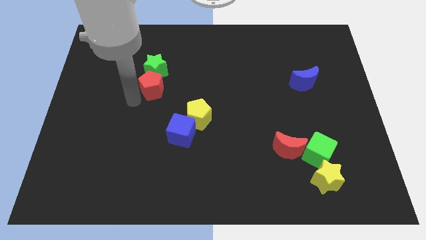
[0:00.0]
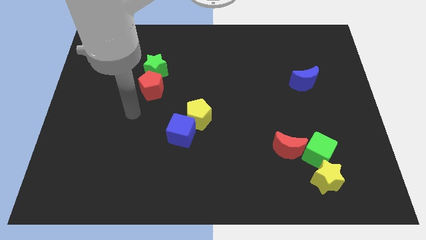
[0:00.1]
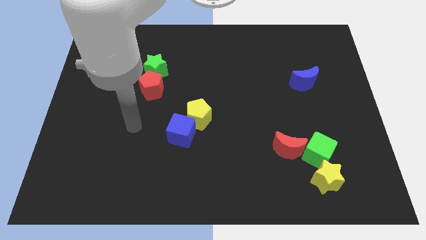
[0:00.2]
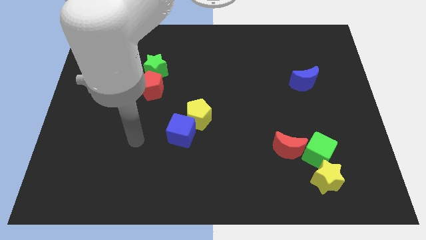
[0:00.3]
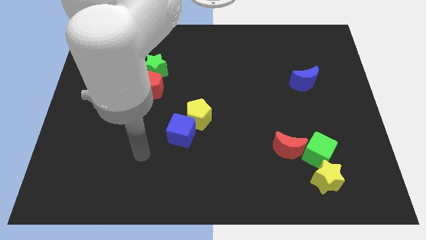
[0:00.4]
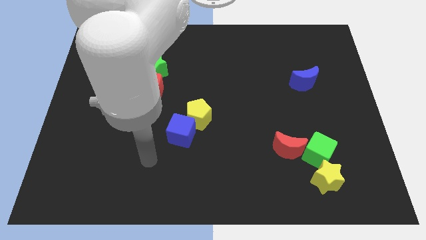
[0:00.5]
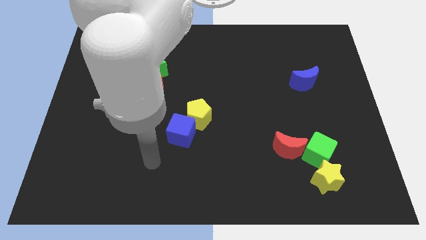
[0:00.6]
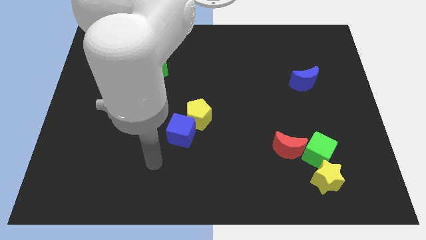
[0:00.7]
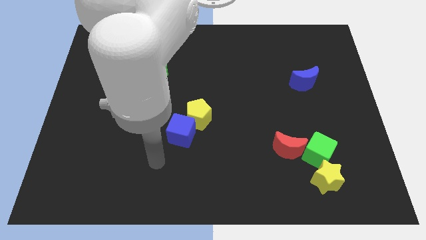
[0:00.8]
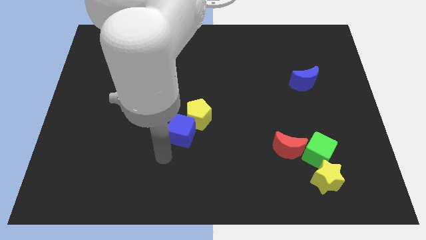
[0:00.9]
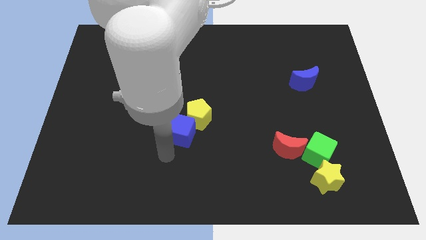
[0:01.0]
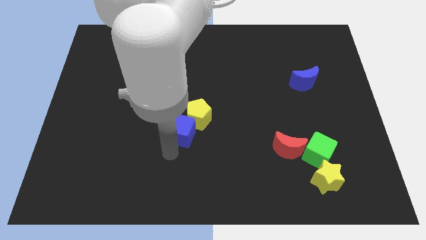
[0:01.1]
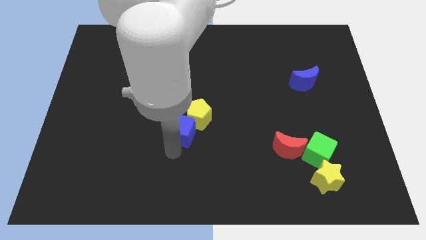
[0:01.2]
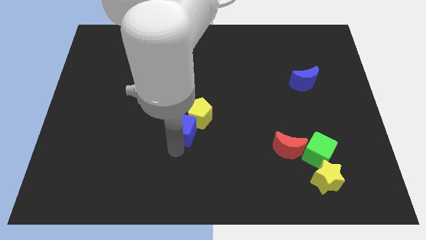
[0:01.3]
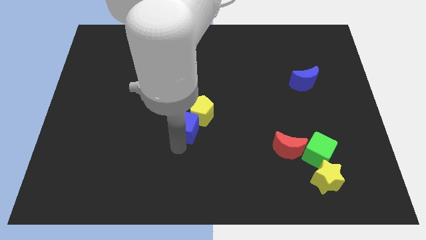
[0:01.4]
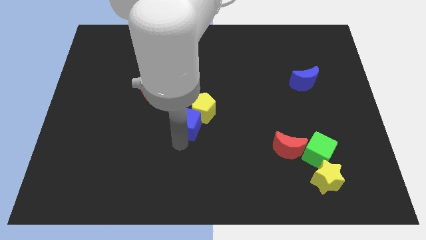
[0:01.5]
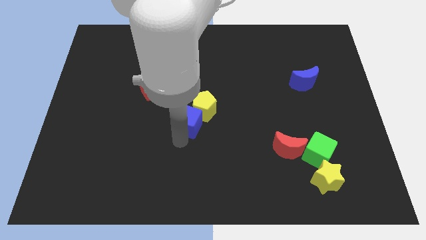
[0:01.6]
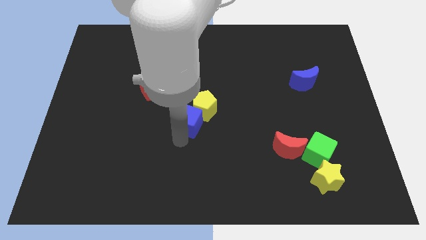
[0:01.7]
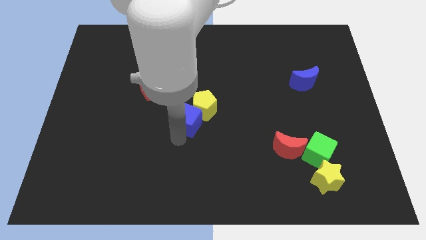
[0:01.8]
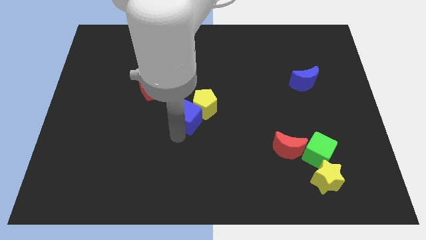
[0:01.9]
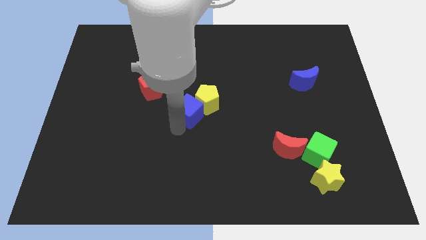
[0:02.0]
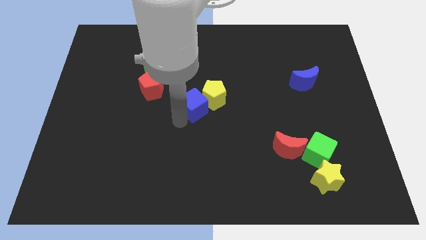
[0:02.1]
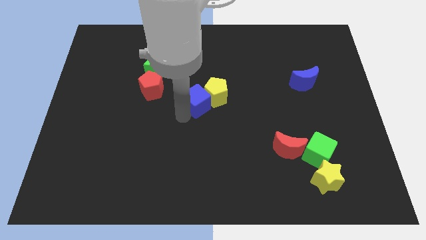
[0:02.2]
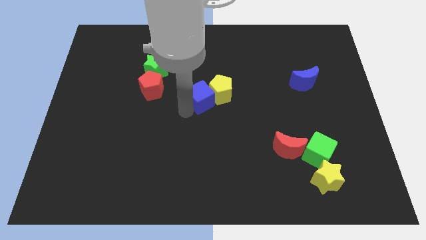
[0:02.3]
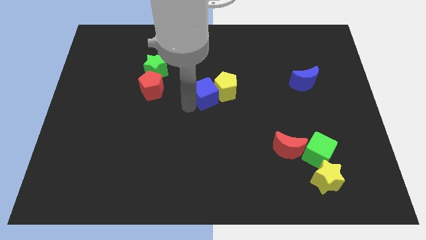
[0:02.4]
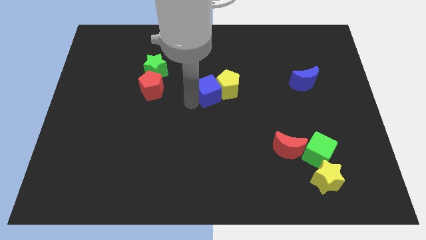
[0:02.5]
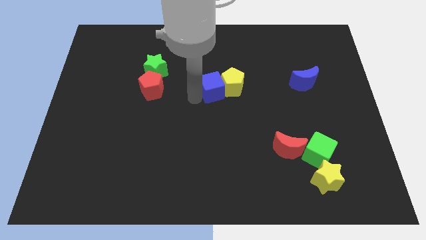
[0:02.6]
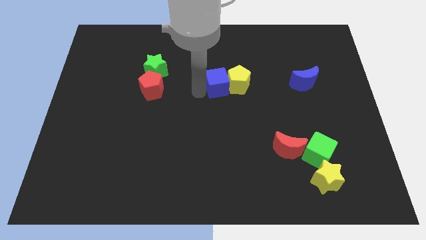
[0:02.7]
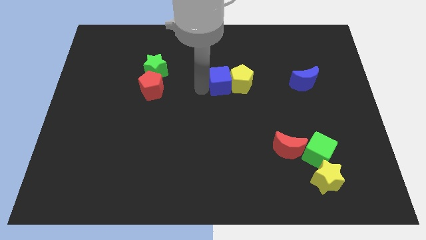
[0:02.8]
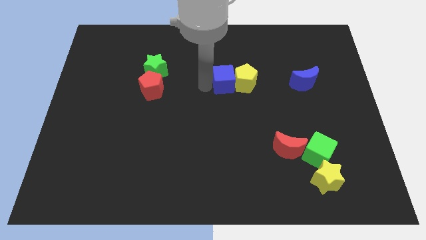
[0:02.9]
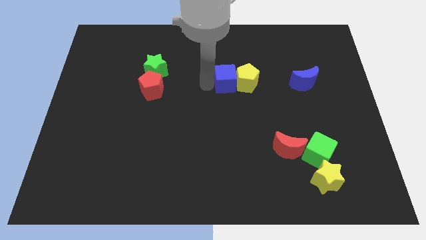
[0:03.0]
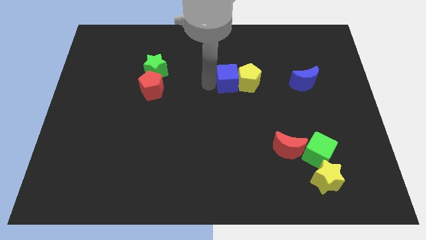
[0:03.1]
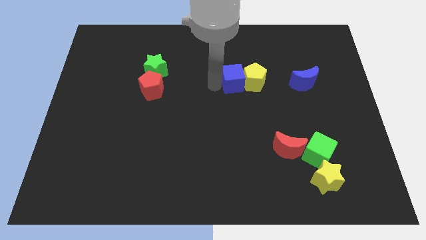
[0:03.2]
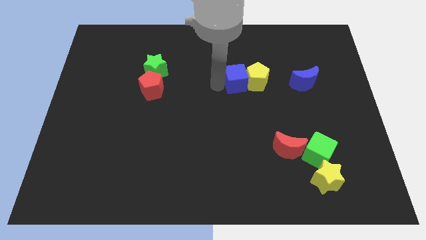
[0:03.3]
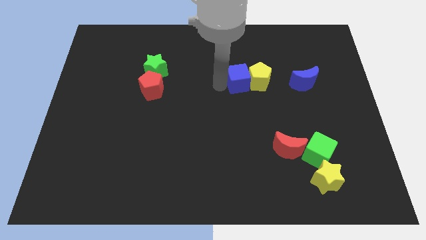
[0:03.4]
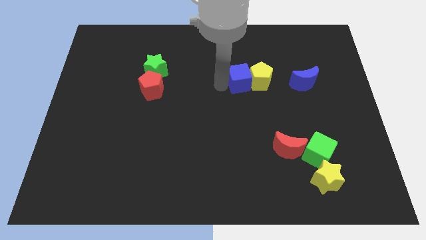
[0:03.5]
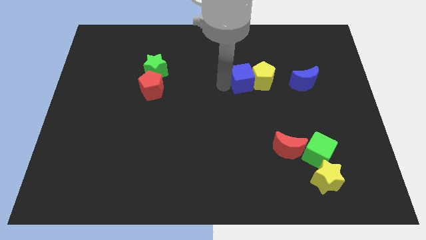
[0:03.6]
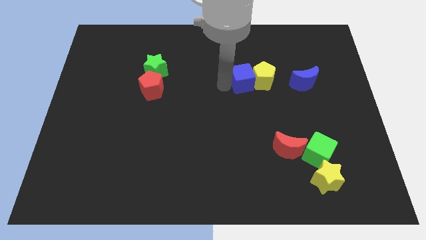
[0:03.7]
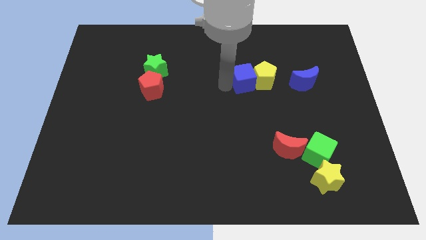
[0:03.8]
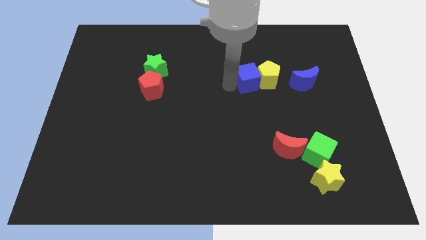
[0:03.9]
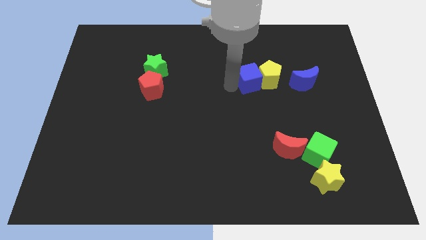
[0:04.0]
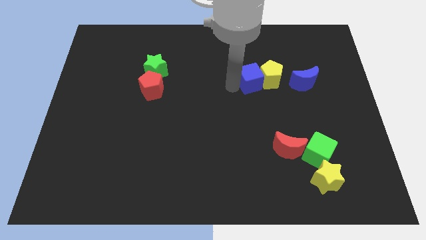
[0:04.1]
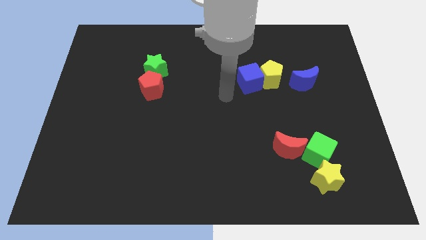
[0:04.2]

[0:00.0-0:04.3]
move both blue cube and yellow pentagon towards blue moon

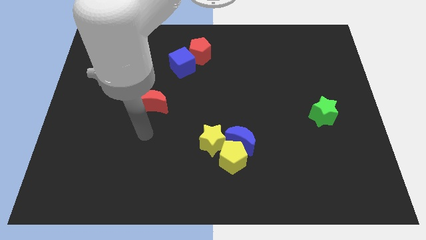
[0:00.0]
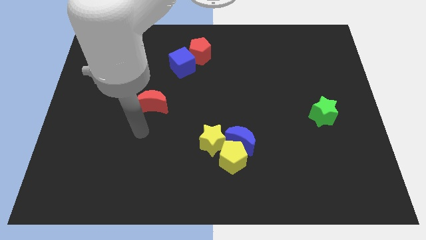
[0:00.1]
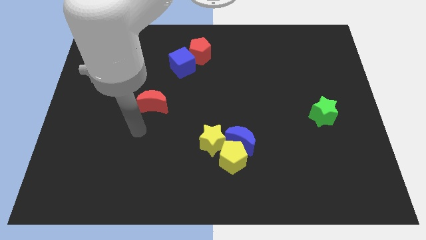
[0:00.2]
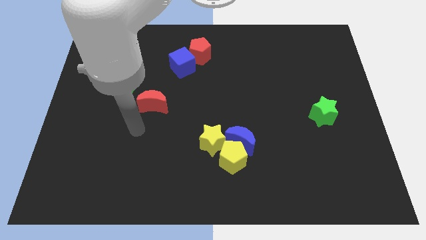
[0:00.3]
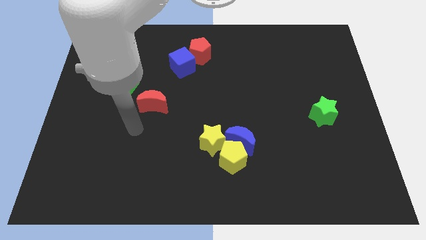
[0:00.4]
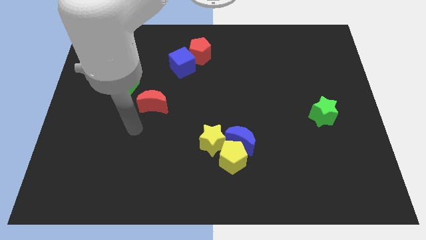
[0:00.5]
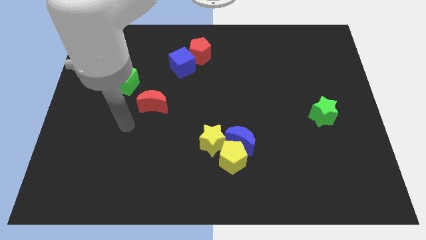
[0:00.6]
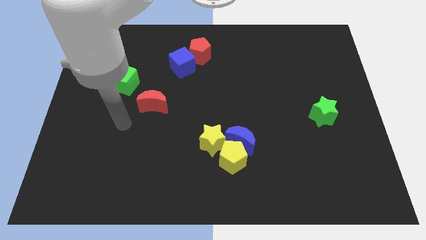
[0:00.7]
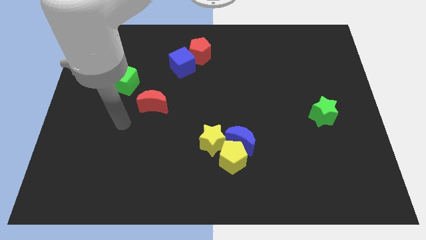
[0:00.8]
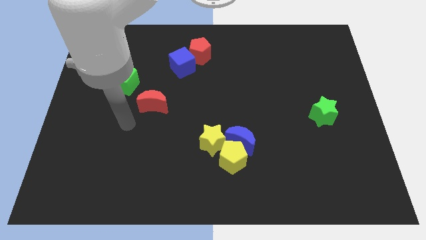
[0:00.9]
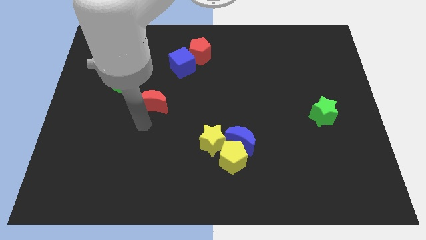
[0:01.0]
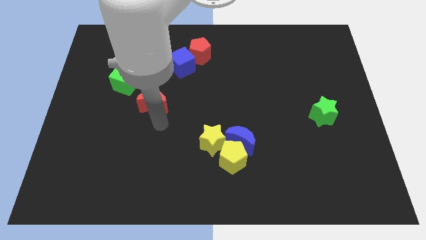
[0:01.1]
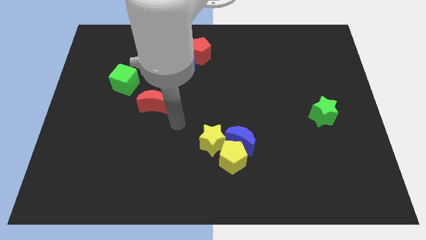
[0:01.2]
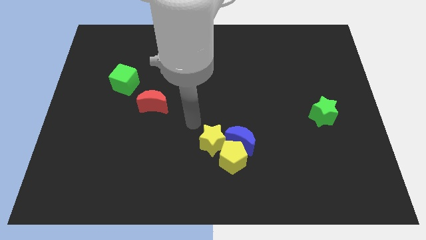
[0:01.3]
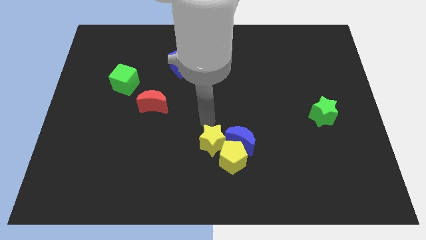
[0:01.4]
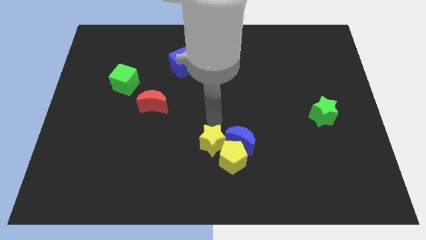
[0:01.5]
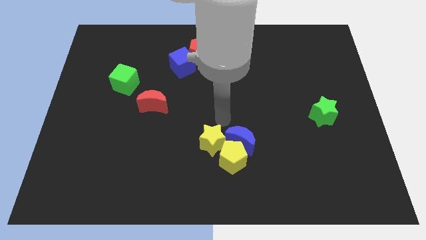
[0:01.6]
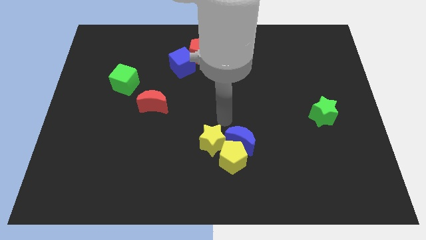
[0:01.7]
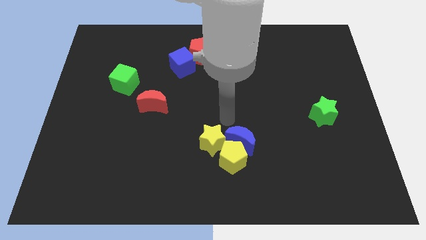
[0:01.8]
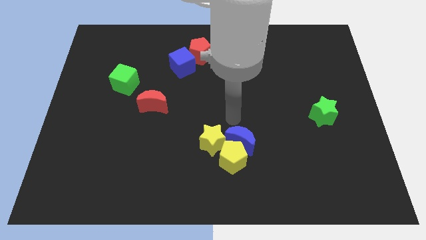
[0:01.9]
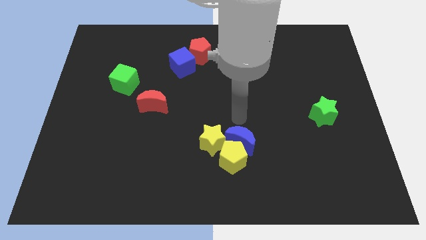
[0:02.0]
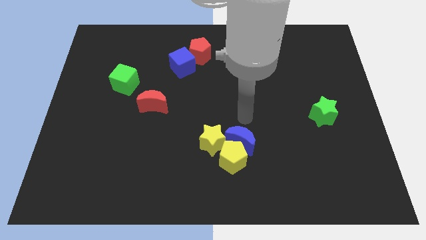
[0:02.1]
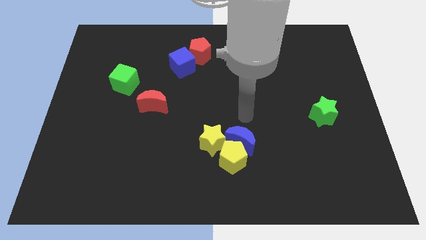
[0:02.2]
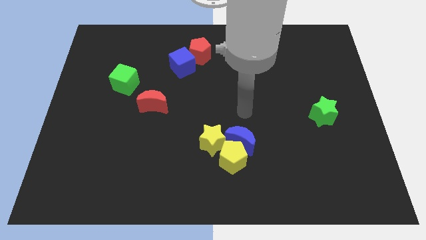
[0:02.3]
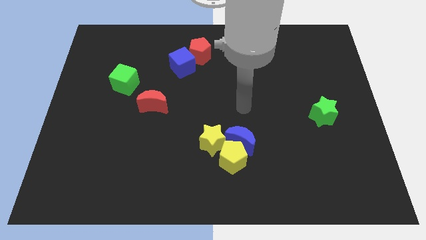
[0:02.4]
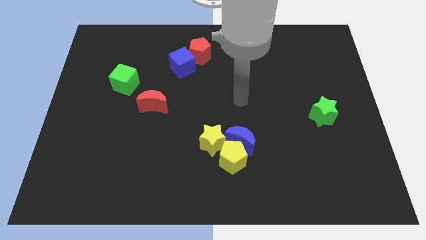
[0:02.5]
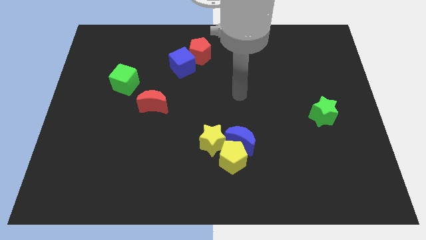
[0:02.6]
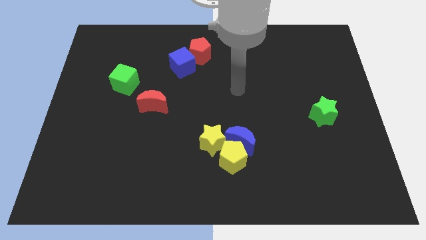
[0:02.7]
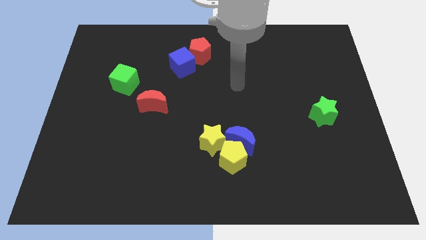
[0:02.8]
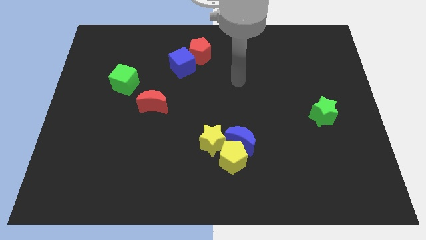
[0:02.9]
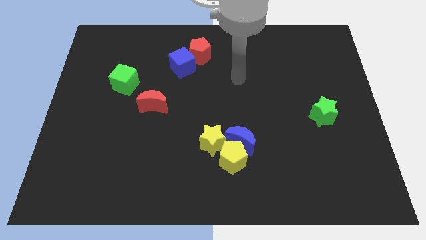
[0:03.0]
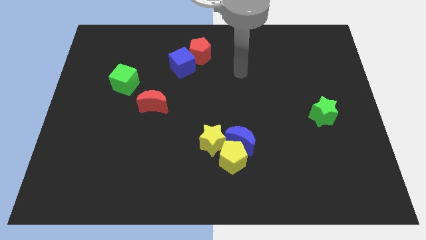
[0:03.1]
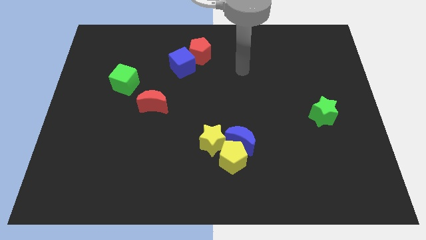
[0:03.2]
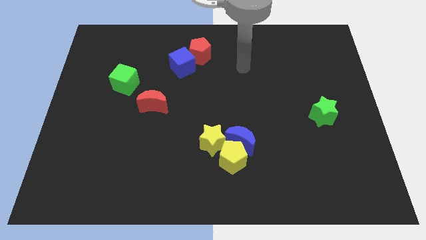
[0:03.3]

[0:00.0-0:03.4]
move your arm to the top side of the table

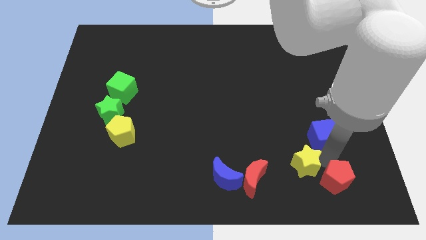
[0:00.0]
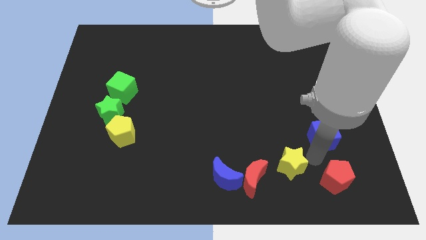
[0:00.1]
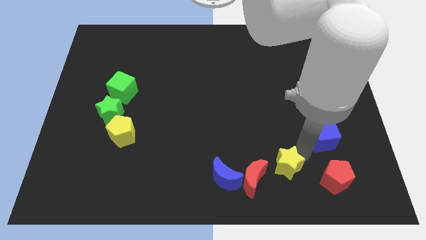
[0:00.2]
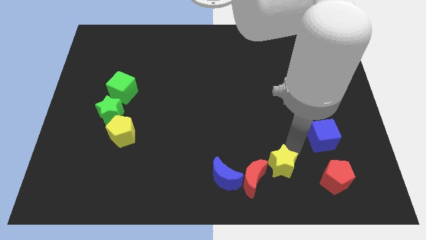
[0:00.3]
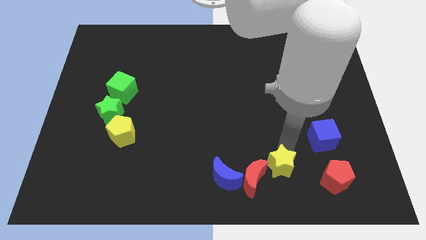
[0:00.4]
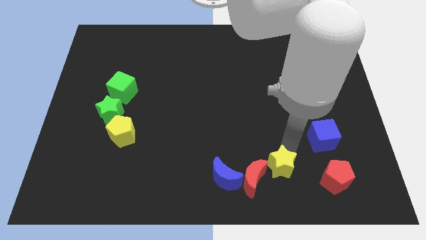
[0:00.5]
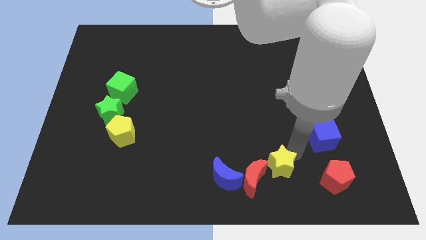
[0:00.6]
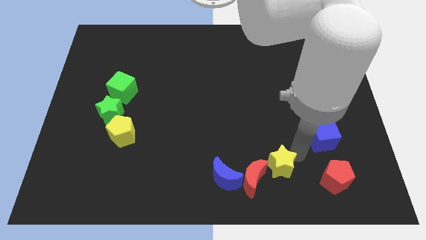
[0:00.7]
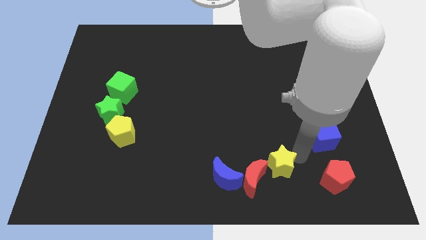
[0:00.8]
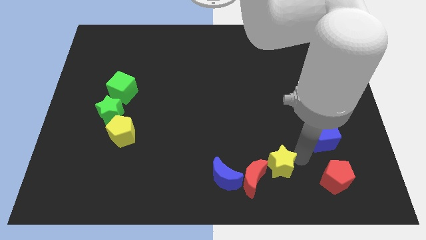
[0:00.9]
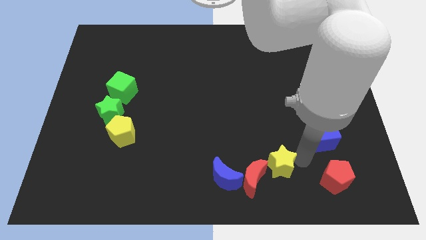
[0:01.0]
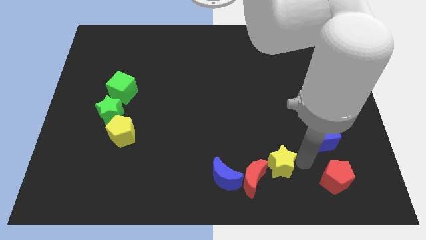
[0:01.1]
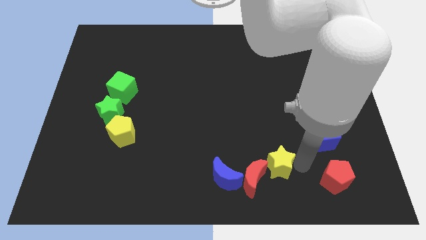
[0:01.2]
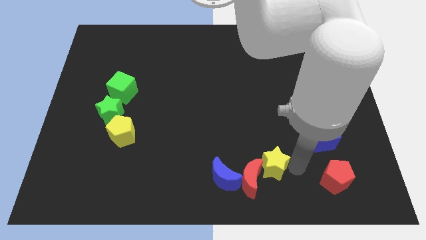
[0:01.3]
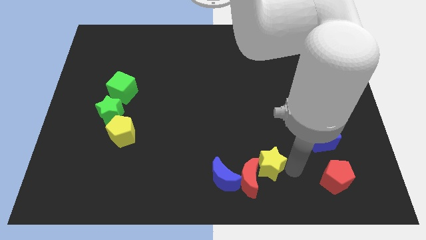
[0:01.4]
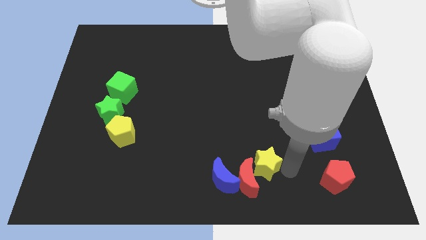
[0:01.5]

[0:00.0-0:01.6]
push the yellow star into the red crescent
